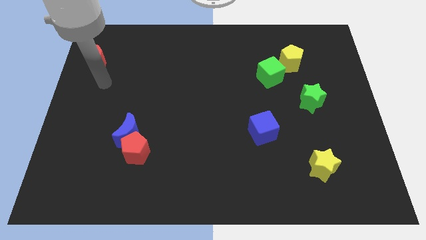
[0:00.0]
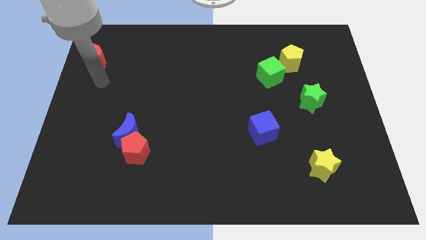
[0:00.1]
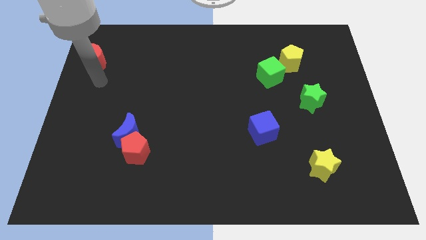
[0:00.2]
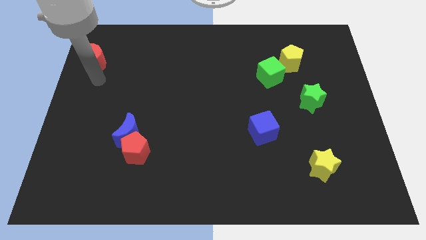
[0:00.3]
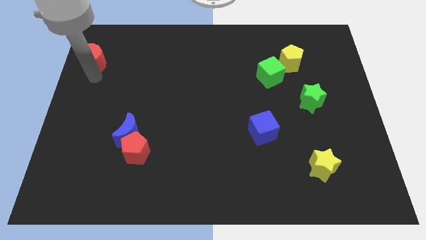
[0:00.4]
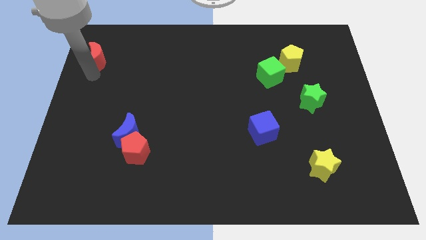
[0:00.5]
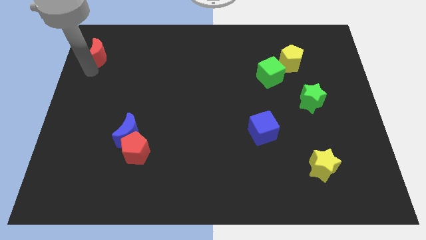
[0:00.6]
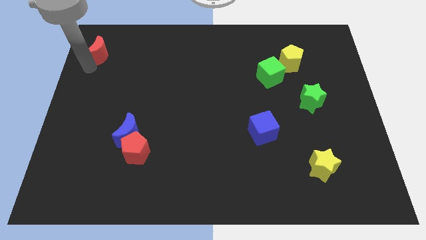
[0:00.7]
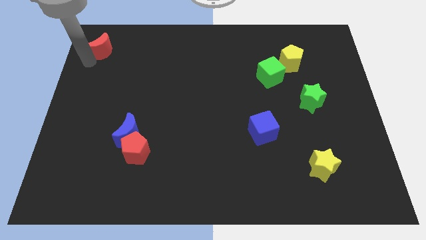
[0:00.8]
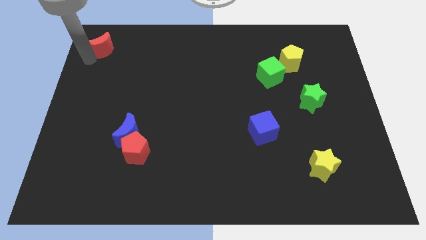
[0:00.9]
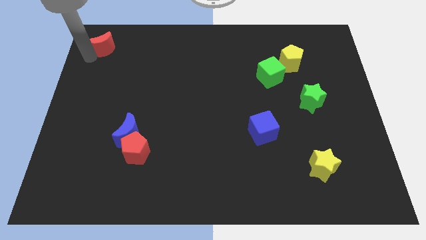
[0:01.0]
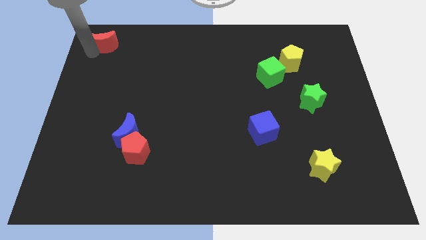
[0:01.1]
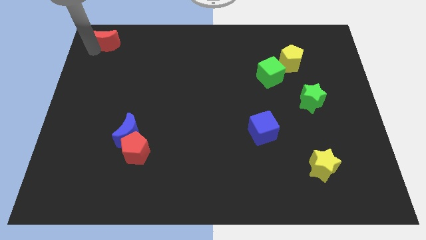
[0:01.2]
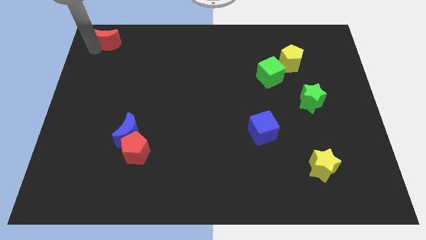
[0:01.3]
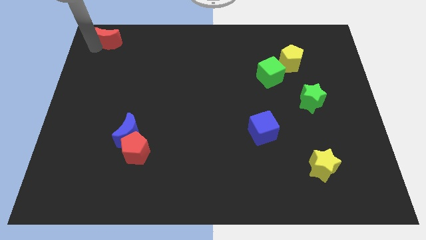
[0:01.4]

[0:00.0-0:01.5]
move the red crescent to the top right

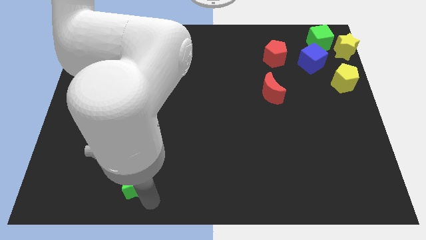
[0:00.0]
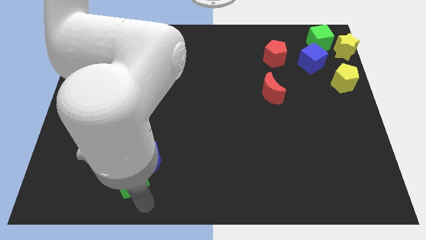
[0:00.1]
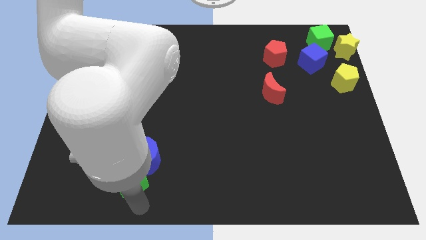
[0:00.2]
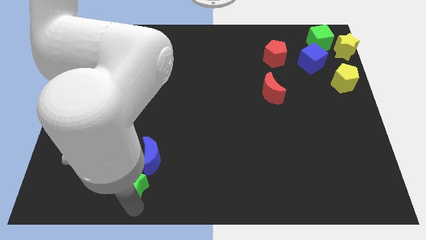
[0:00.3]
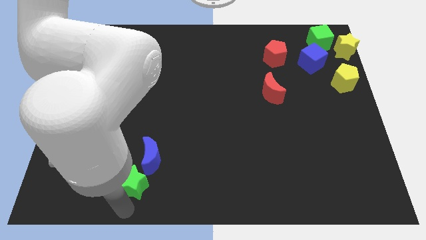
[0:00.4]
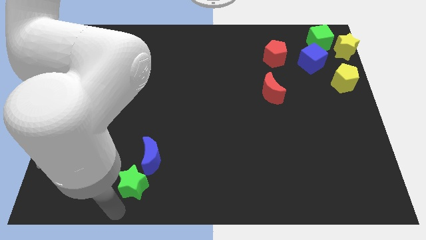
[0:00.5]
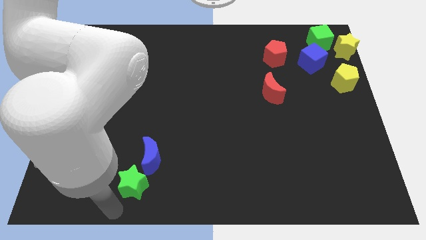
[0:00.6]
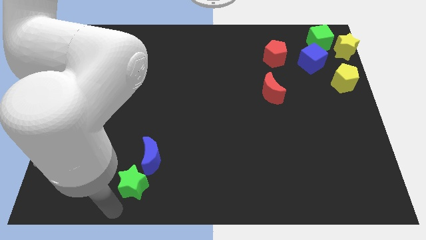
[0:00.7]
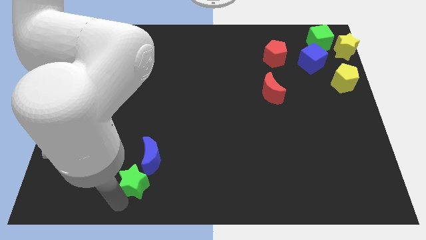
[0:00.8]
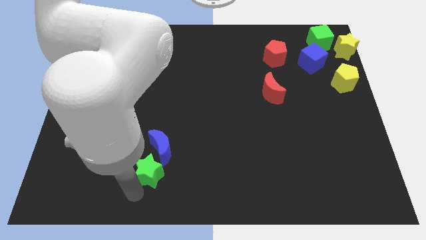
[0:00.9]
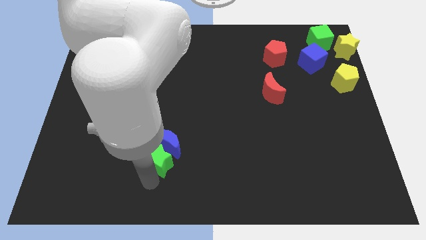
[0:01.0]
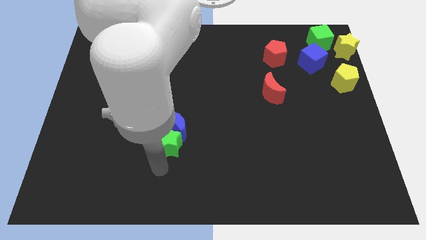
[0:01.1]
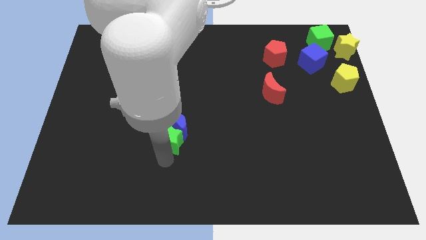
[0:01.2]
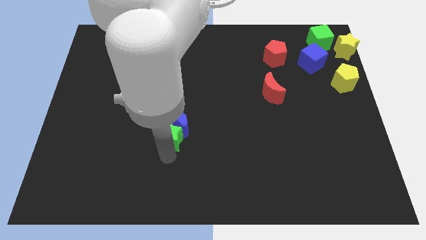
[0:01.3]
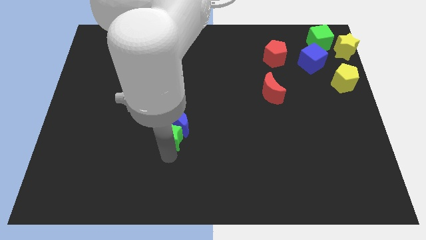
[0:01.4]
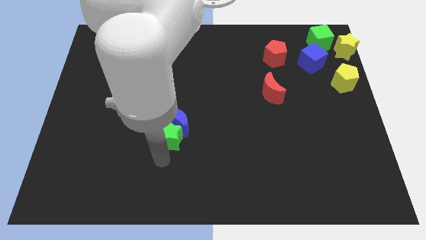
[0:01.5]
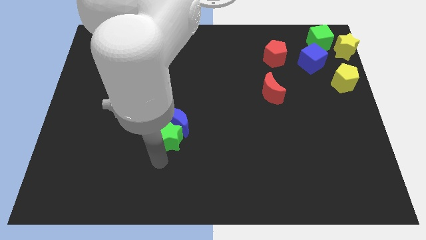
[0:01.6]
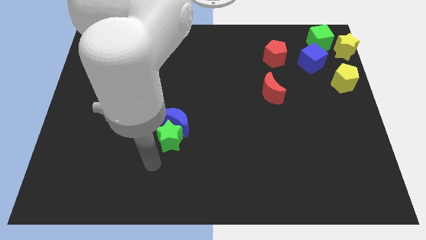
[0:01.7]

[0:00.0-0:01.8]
push the blue moon with the green star

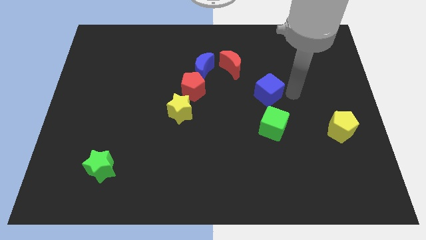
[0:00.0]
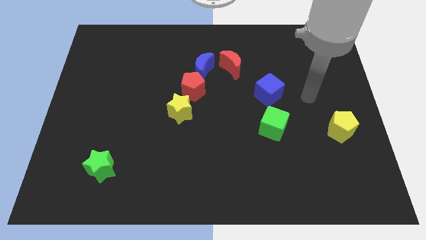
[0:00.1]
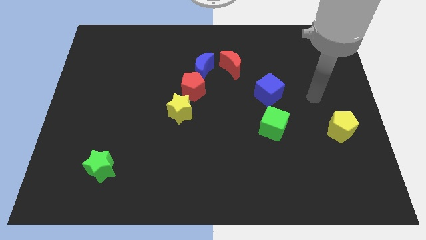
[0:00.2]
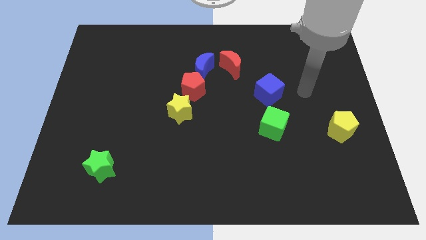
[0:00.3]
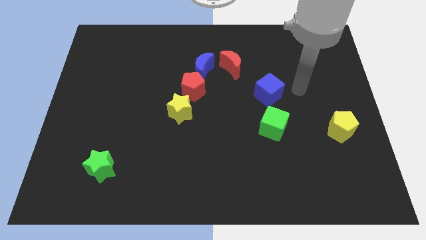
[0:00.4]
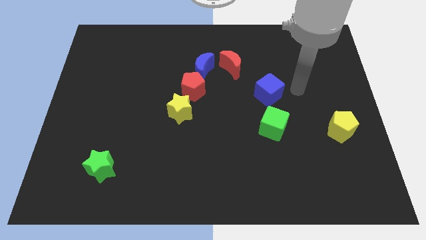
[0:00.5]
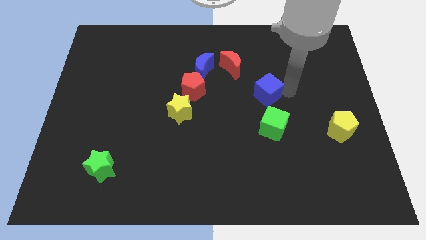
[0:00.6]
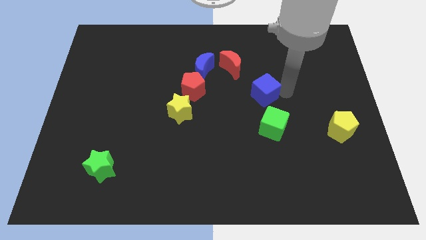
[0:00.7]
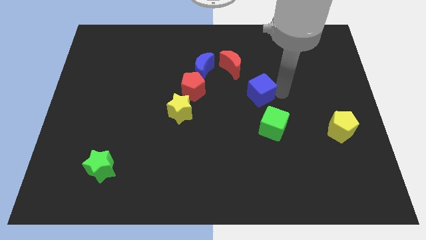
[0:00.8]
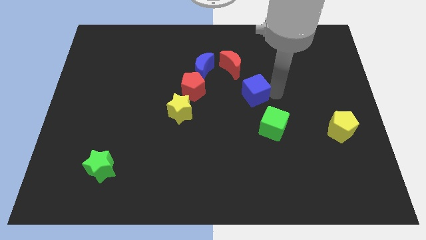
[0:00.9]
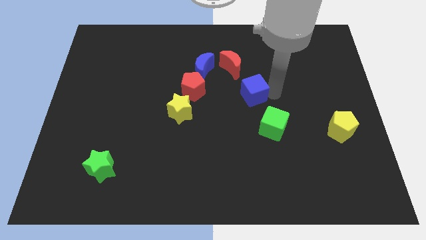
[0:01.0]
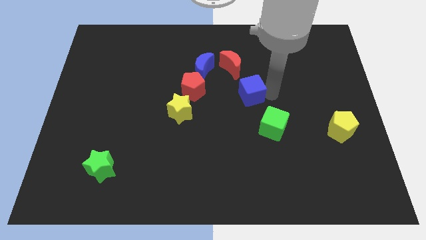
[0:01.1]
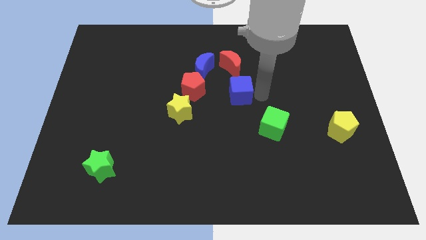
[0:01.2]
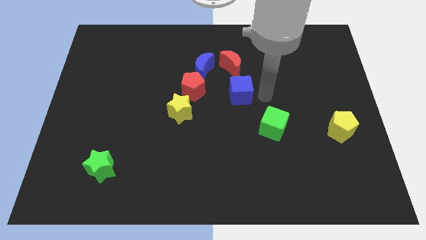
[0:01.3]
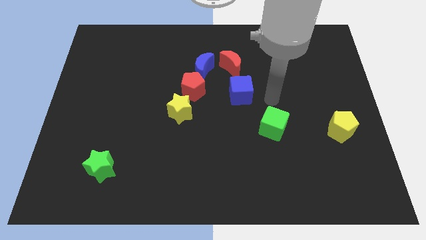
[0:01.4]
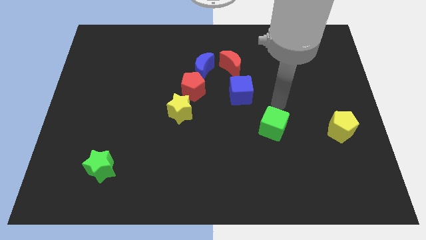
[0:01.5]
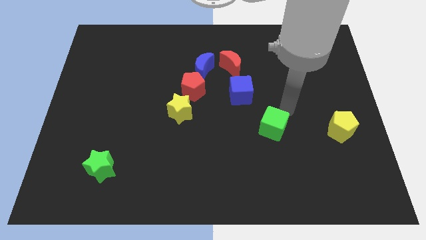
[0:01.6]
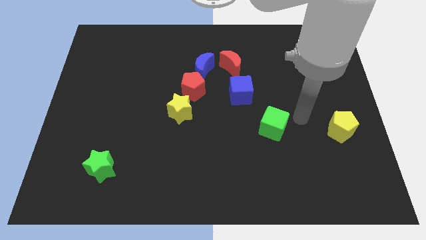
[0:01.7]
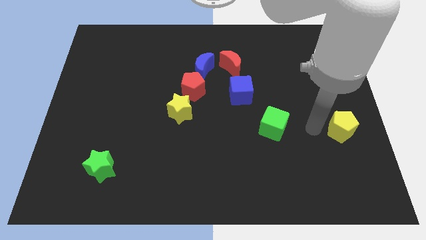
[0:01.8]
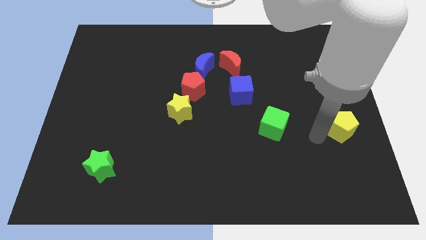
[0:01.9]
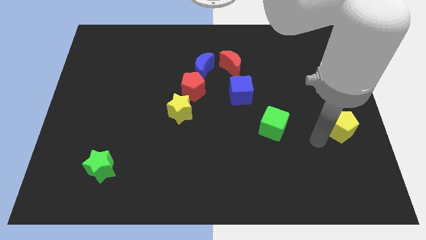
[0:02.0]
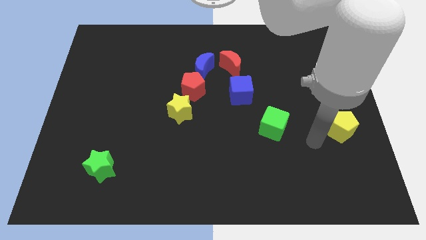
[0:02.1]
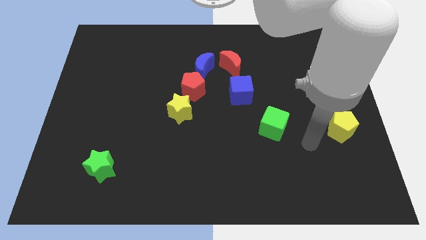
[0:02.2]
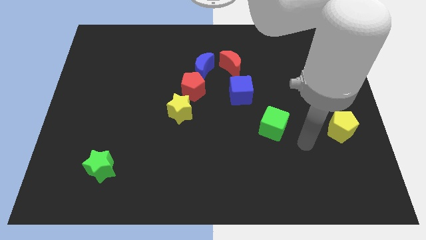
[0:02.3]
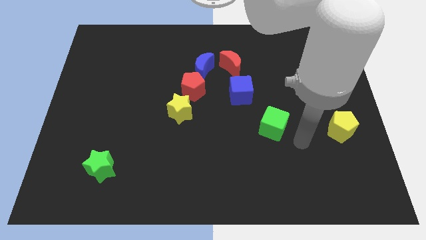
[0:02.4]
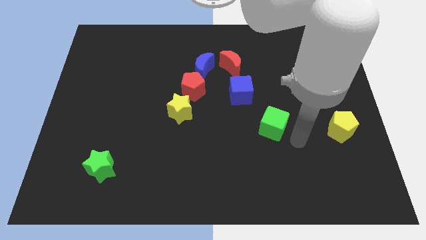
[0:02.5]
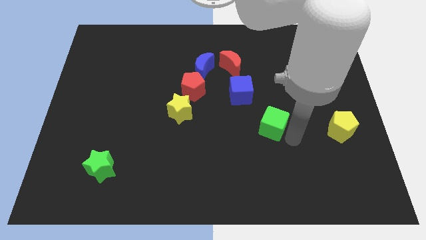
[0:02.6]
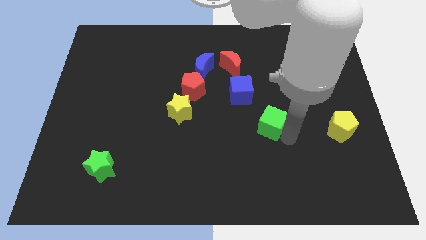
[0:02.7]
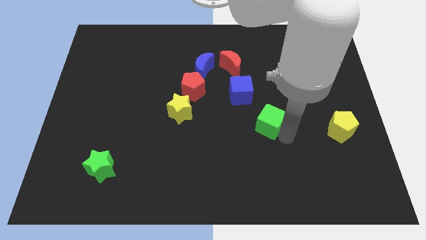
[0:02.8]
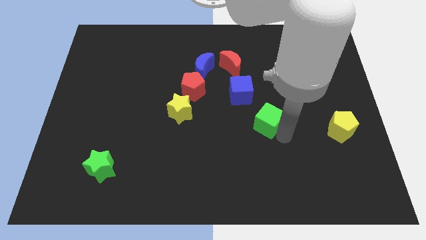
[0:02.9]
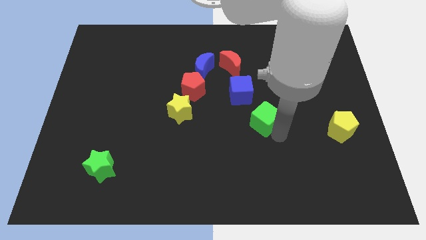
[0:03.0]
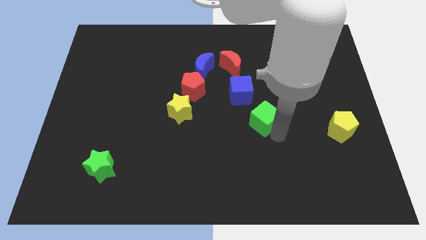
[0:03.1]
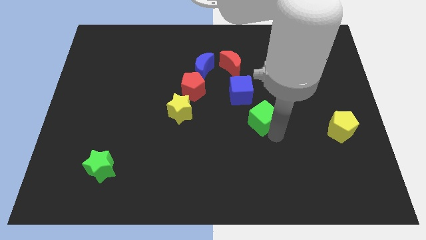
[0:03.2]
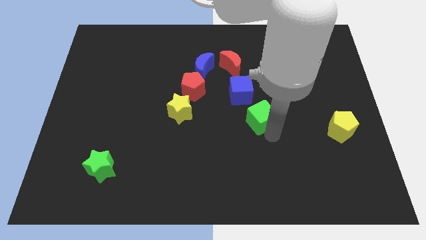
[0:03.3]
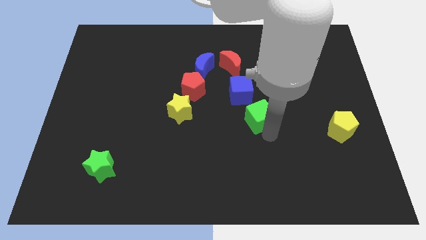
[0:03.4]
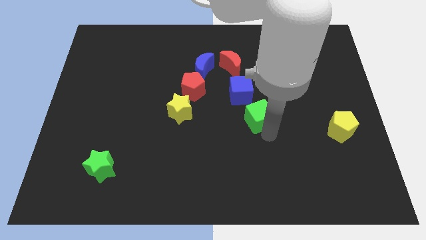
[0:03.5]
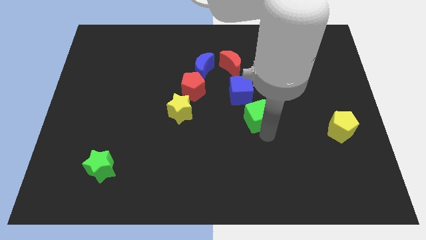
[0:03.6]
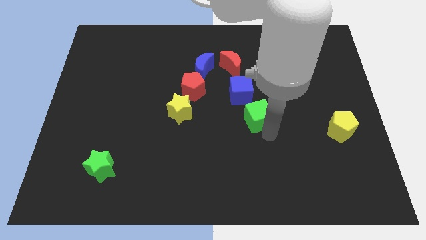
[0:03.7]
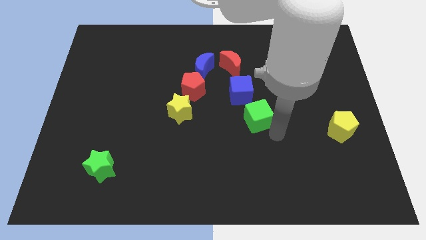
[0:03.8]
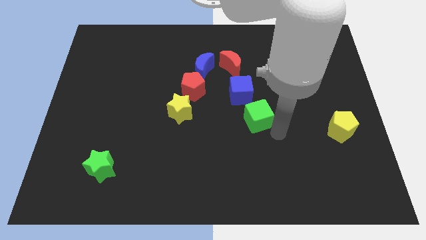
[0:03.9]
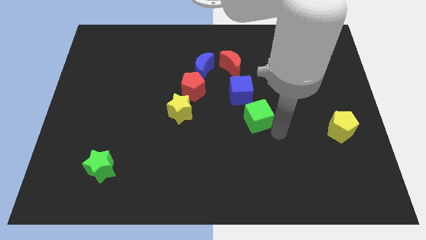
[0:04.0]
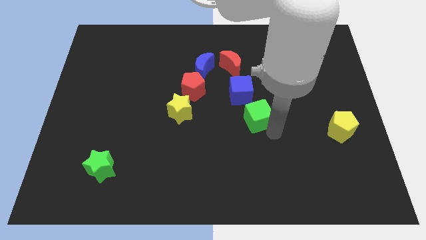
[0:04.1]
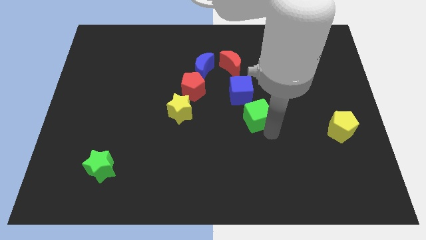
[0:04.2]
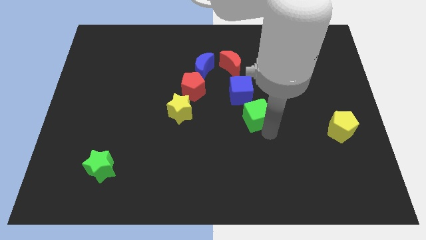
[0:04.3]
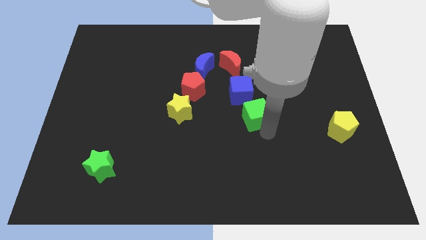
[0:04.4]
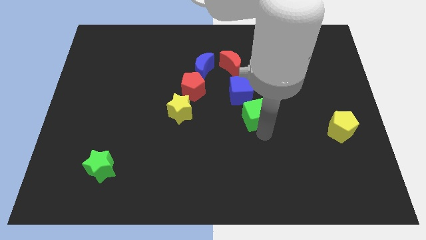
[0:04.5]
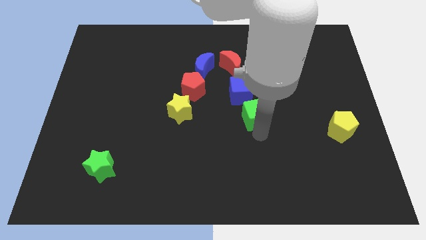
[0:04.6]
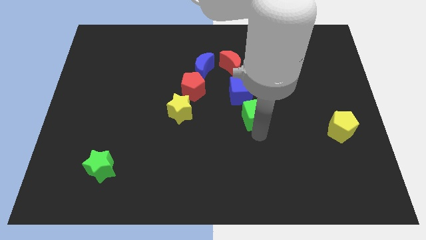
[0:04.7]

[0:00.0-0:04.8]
move the blue cube and green cube towards the bottom side of the red crescent

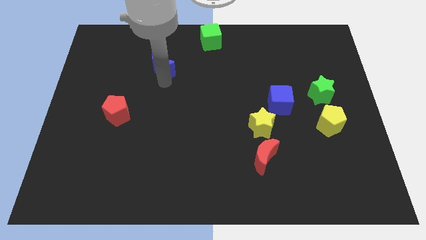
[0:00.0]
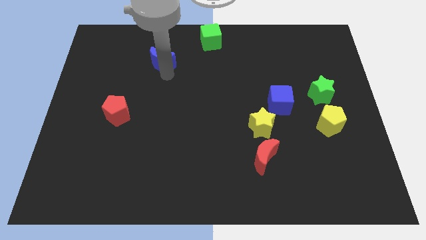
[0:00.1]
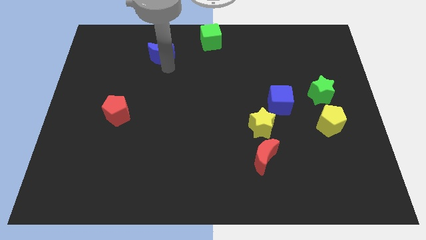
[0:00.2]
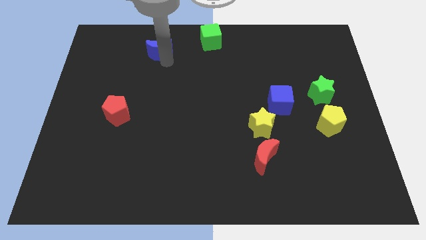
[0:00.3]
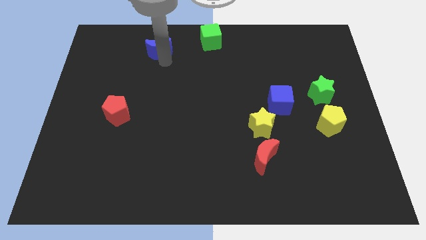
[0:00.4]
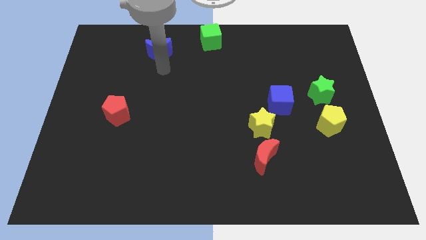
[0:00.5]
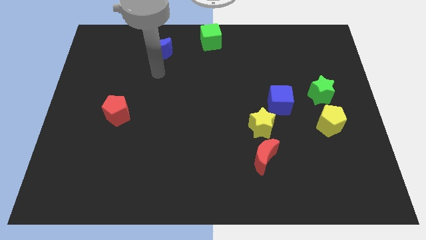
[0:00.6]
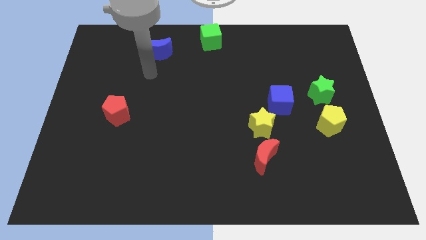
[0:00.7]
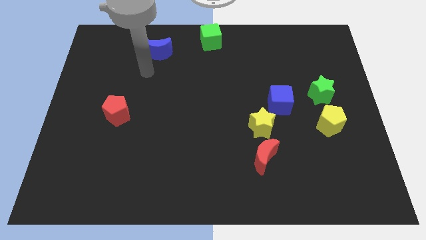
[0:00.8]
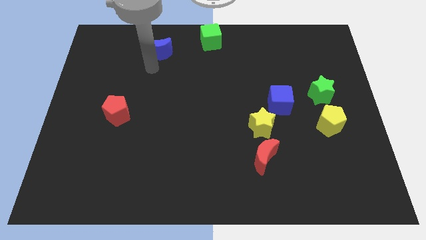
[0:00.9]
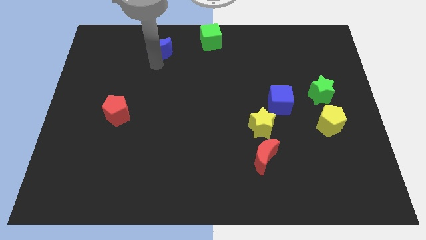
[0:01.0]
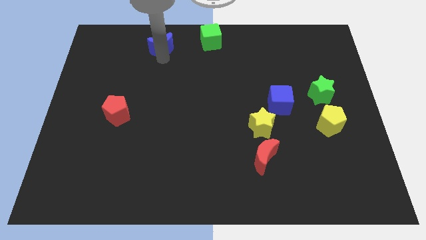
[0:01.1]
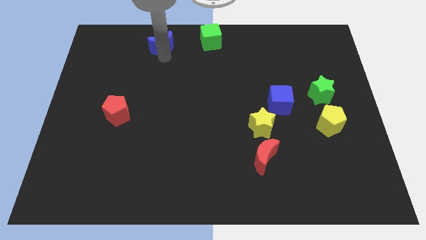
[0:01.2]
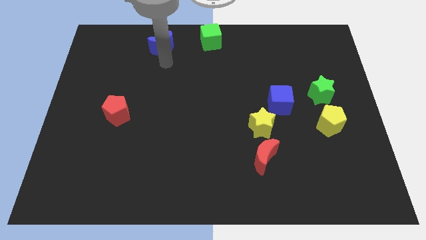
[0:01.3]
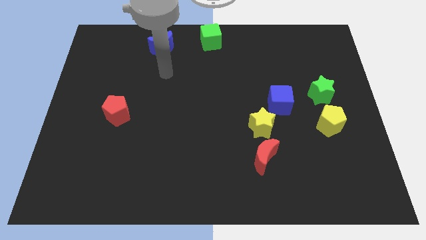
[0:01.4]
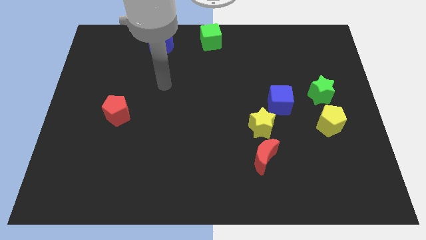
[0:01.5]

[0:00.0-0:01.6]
place the blue crescent parallel to the green cube
